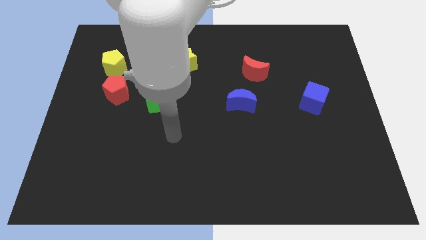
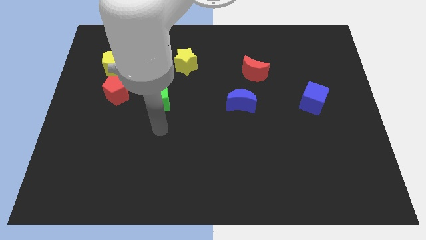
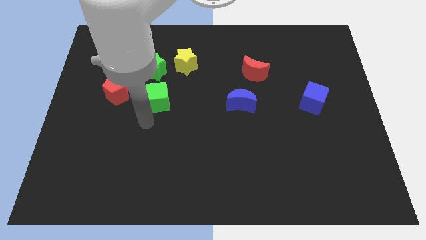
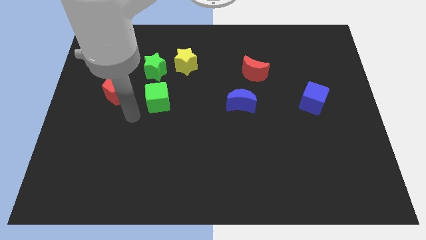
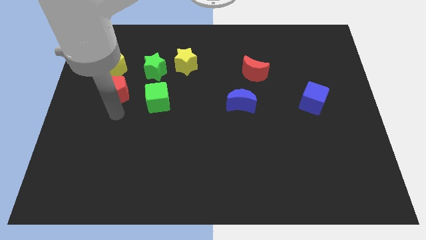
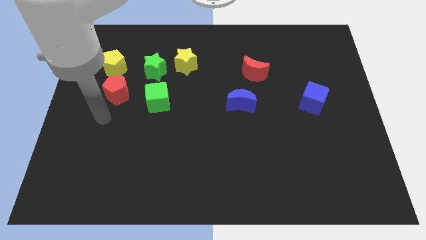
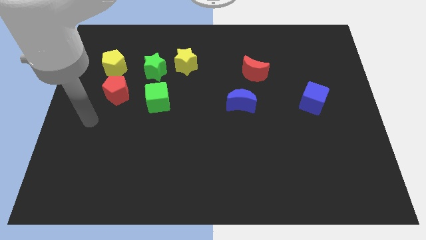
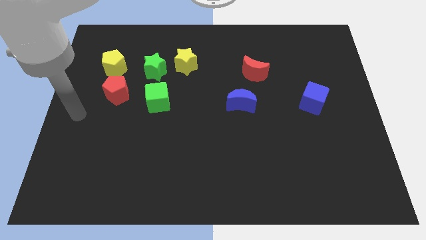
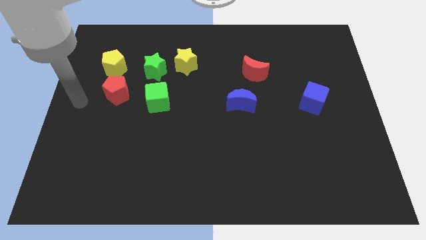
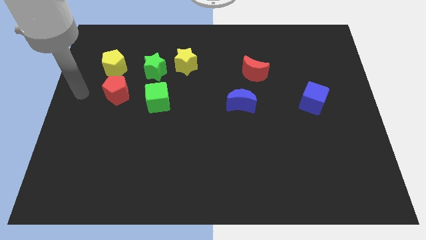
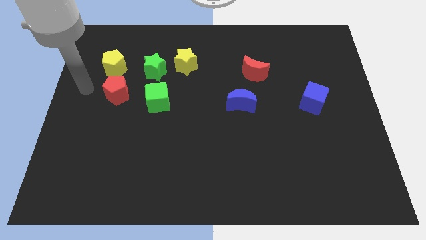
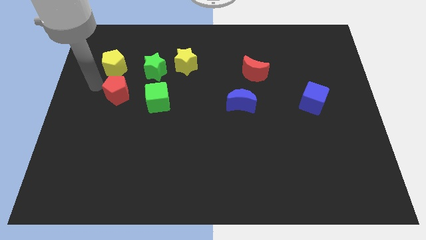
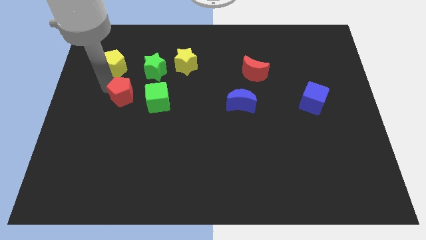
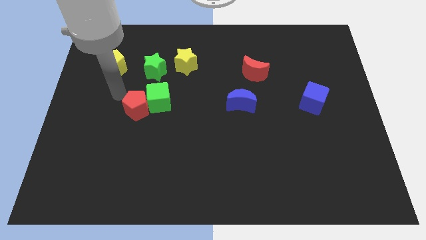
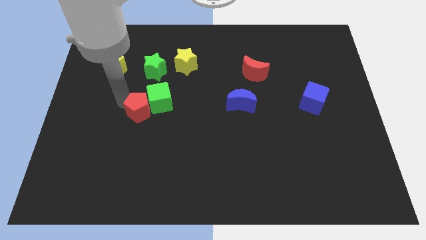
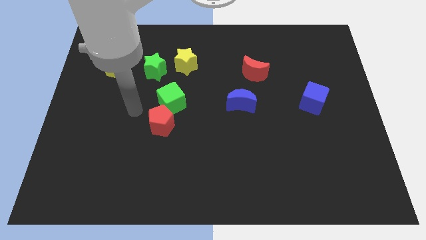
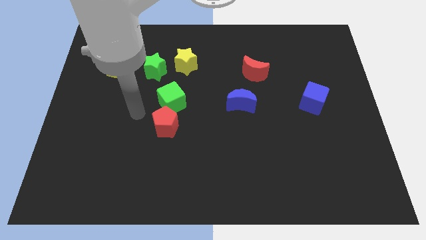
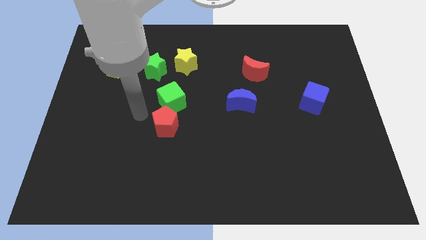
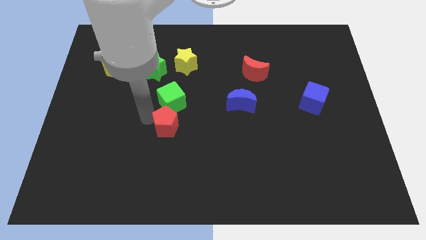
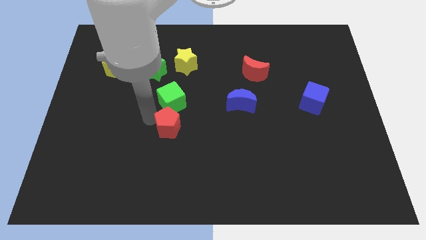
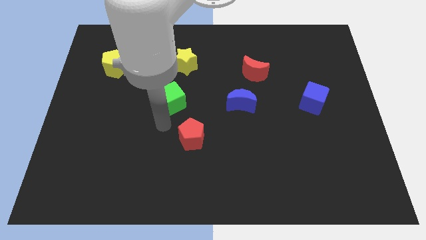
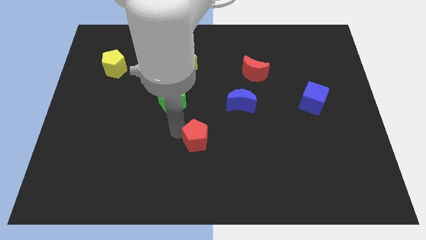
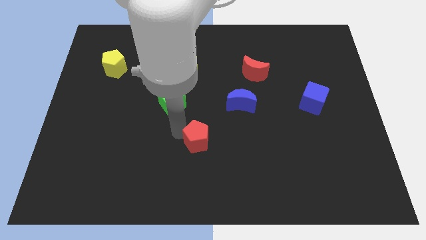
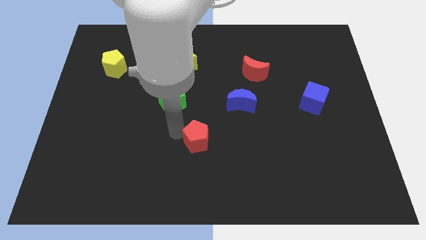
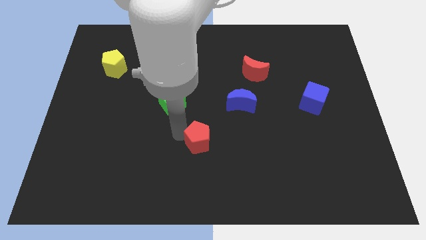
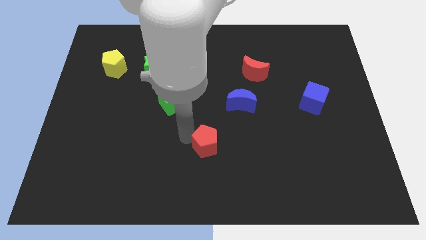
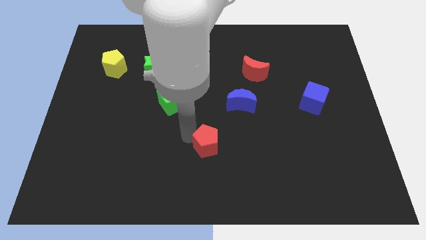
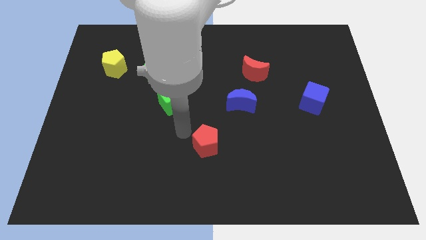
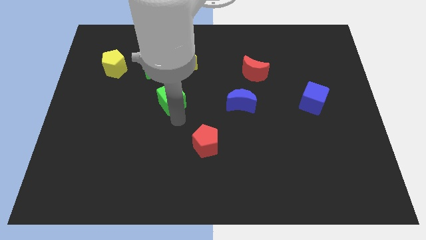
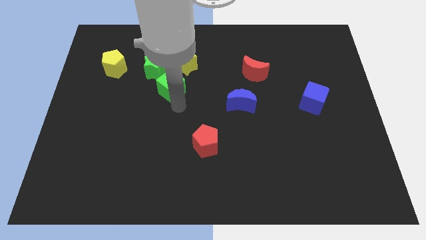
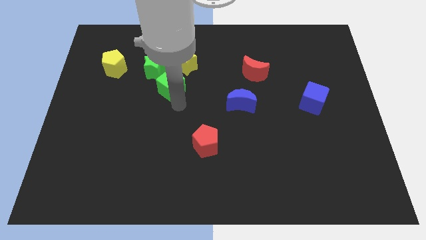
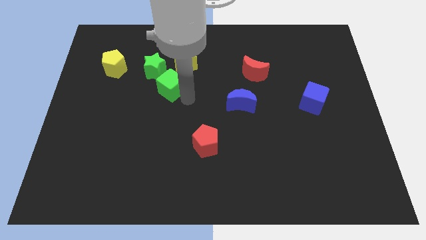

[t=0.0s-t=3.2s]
drag the red pentagon at the bottom center of the board

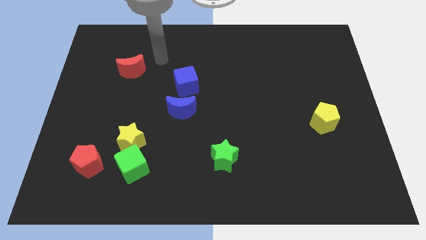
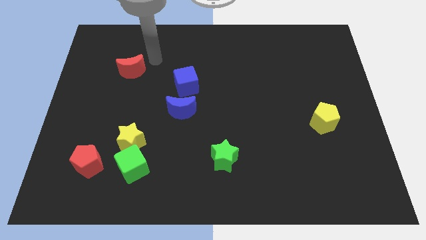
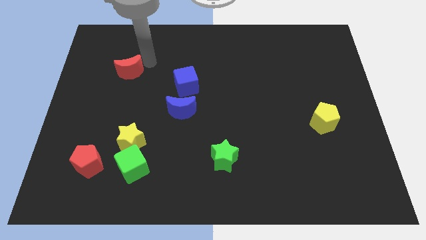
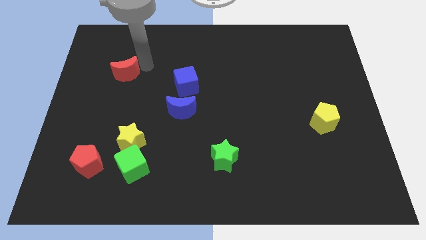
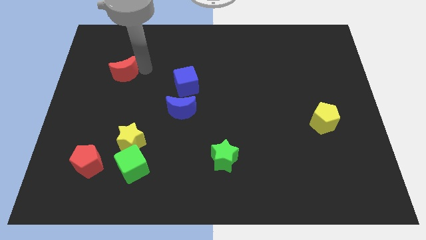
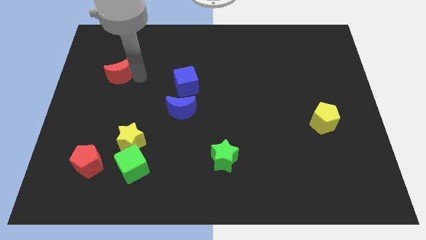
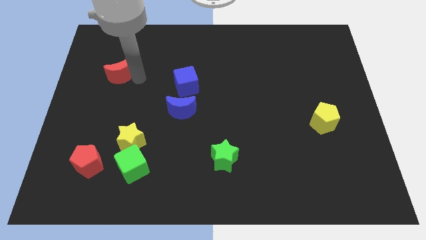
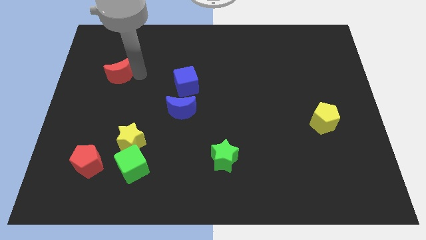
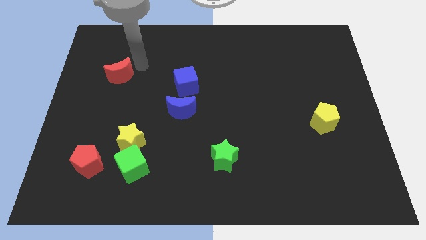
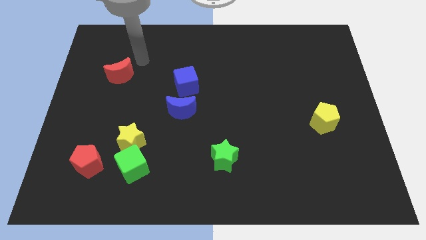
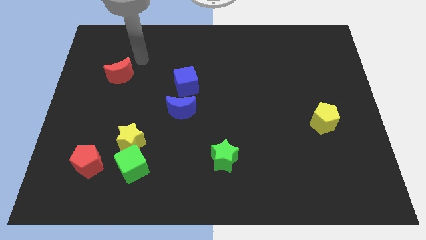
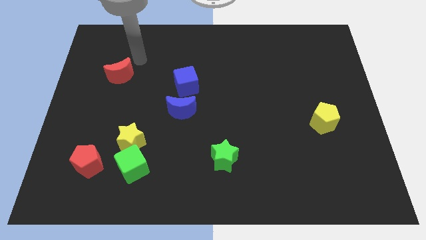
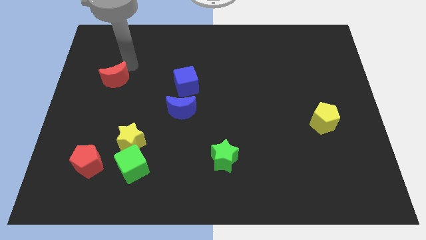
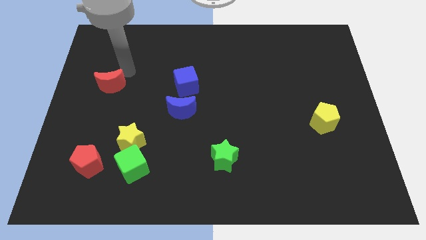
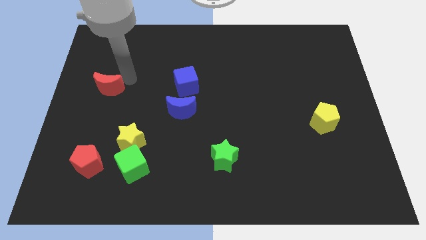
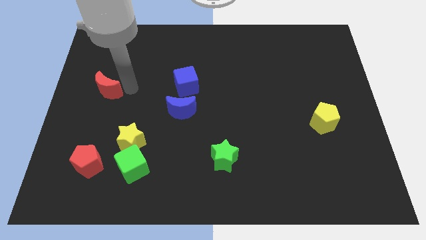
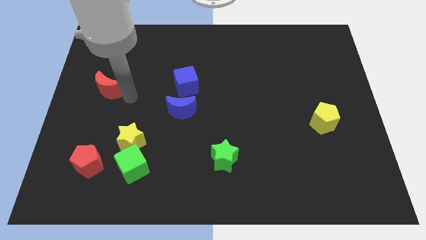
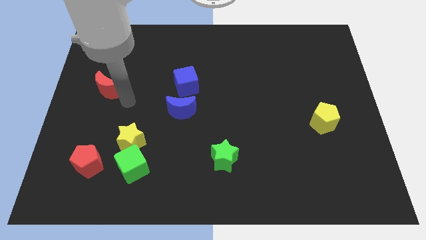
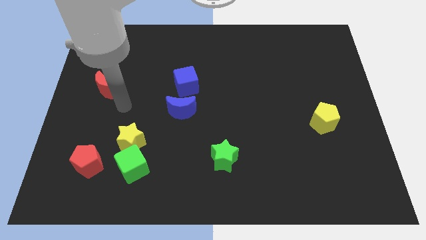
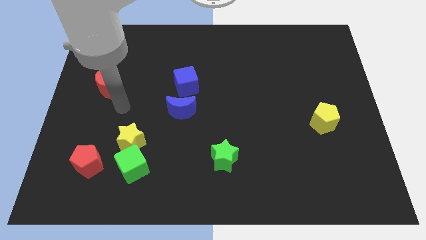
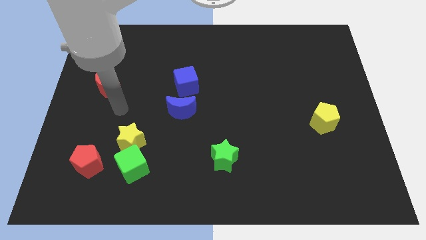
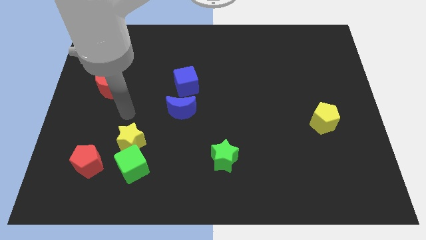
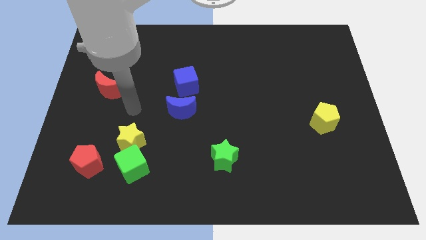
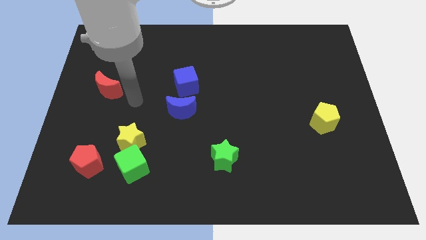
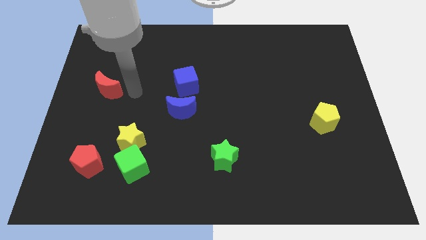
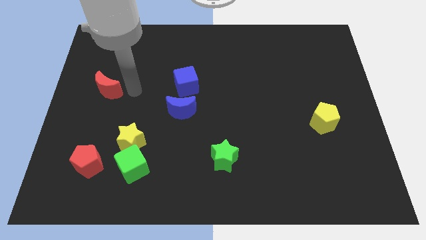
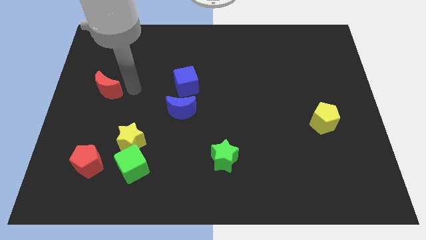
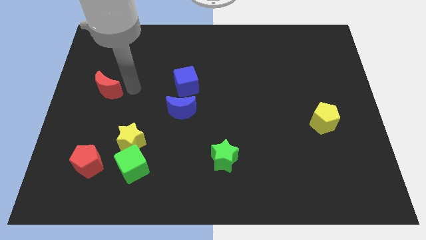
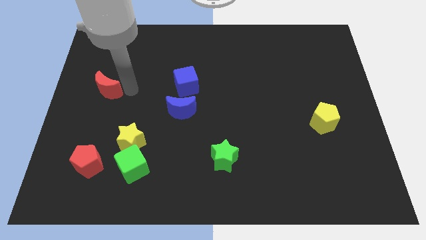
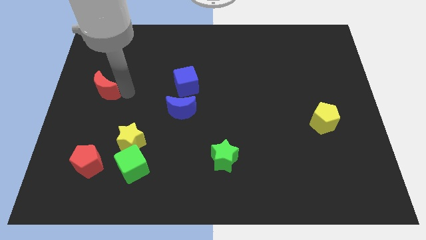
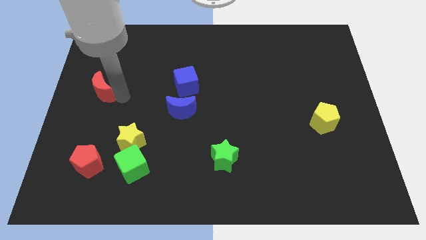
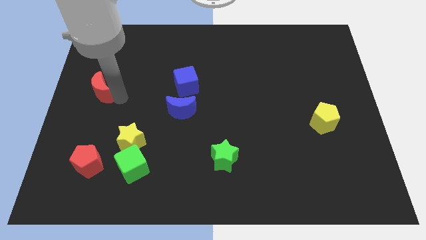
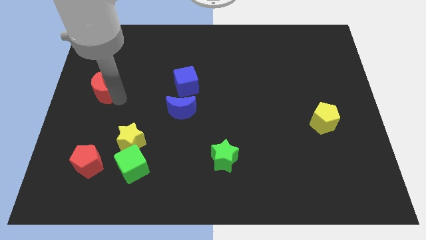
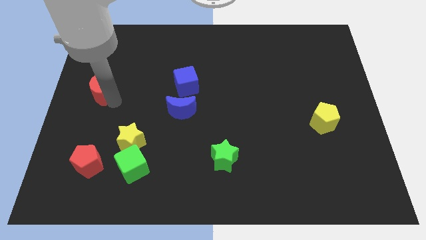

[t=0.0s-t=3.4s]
slide the red moon vertically above the red pentagon

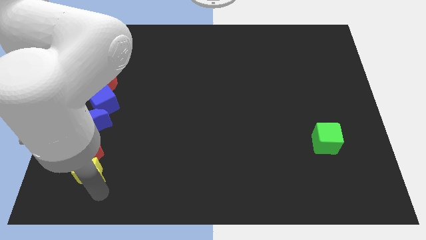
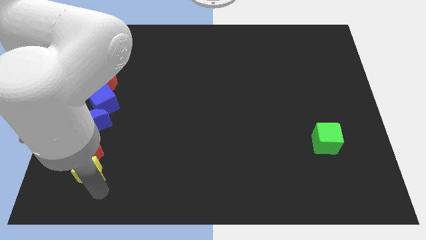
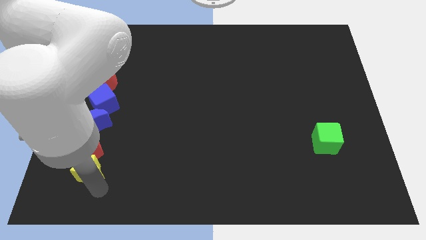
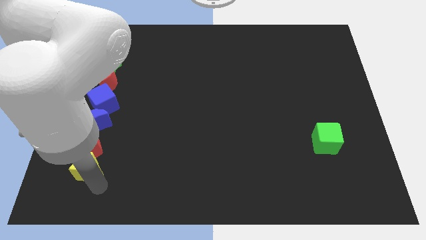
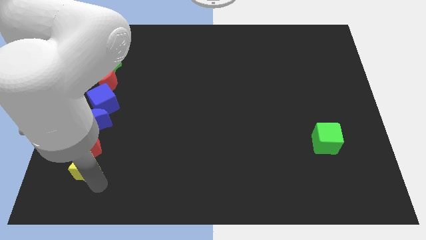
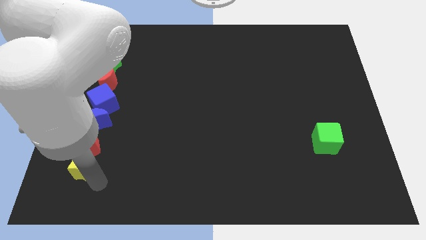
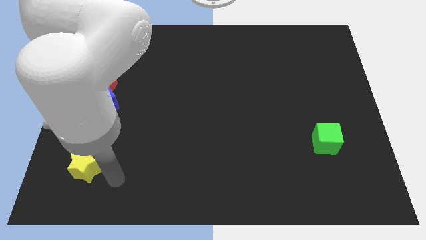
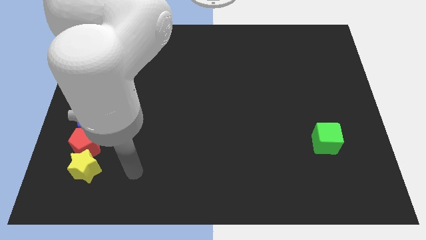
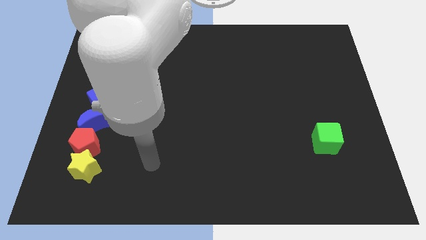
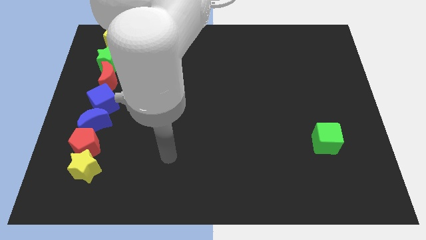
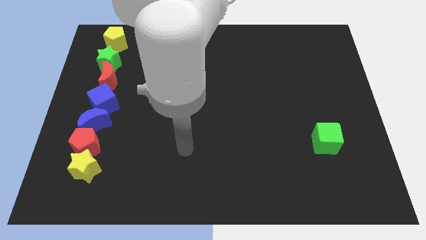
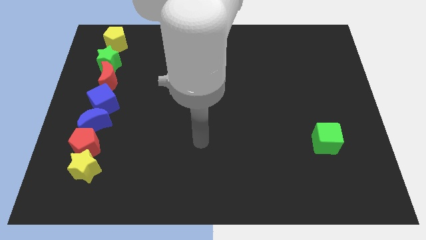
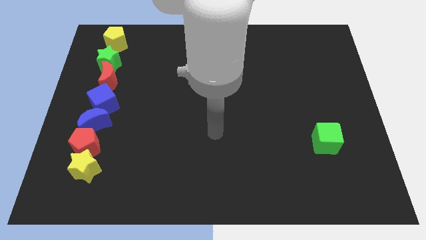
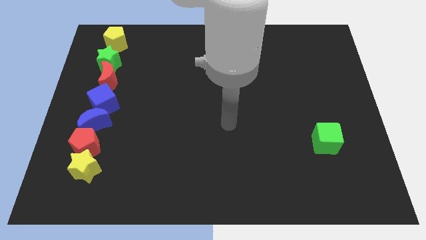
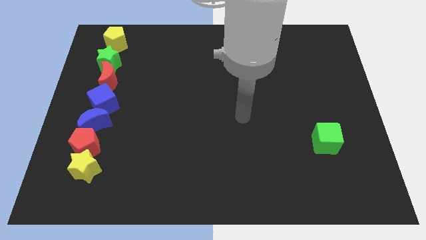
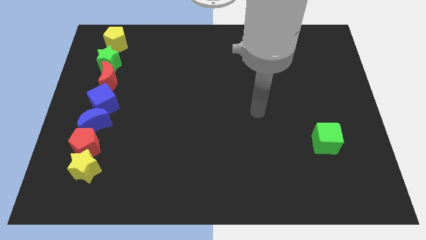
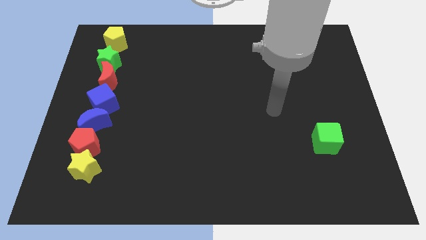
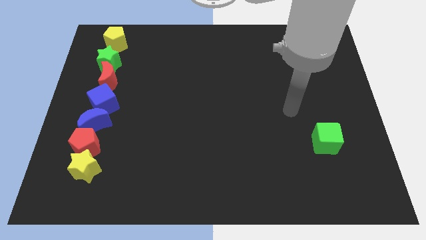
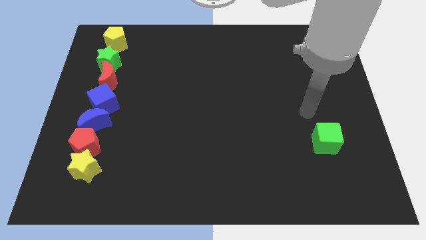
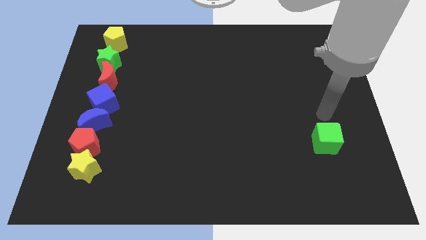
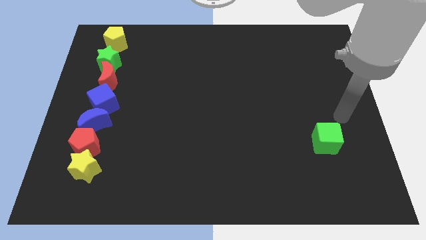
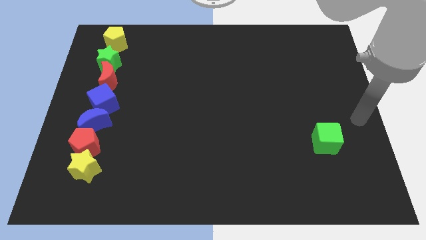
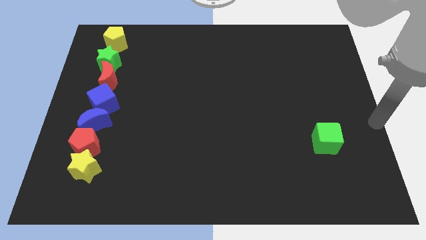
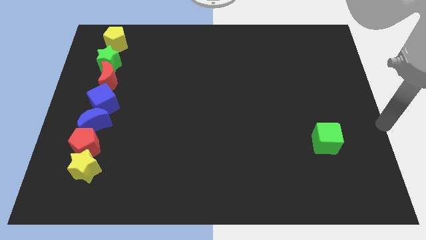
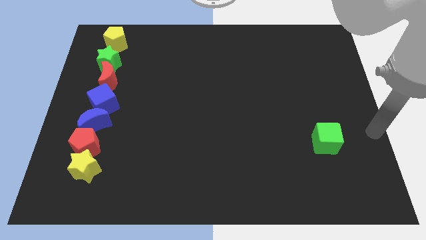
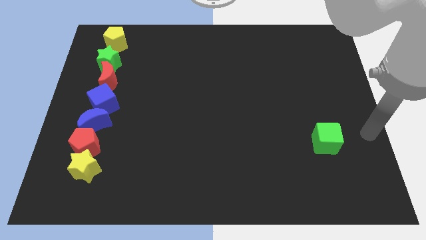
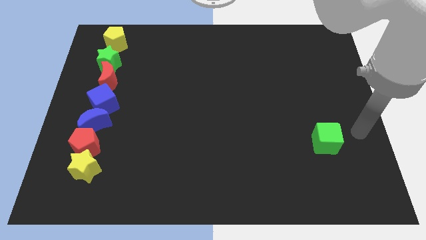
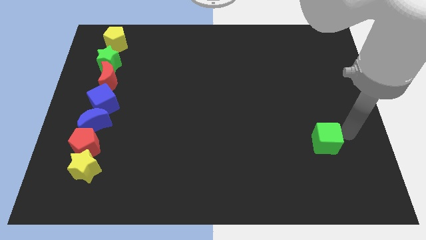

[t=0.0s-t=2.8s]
go and touch the right side of the green cube
